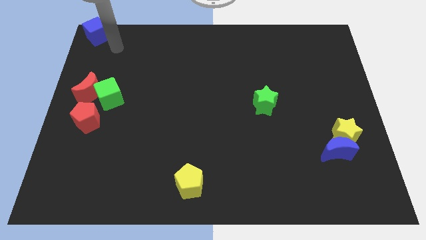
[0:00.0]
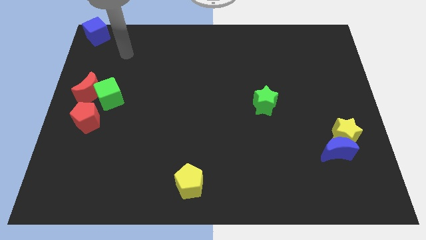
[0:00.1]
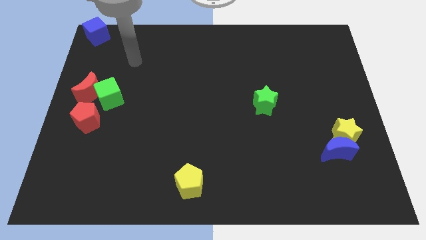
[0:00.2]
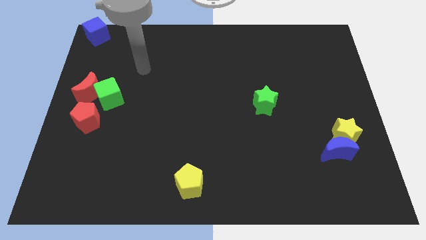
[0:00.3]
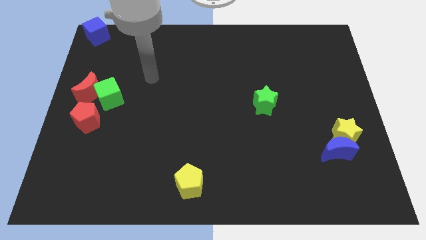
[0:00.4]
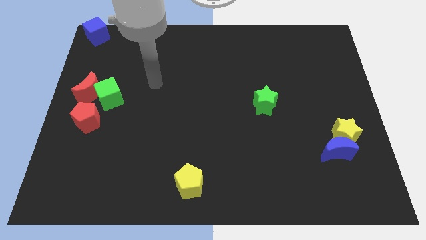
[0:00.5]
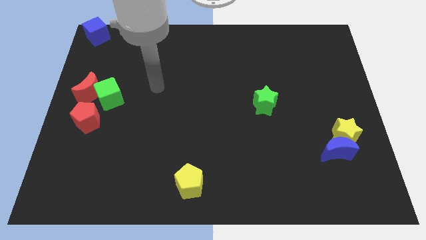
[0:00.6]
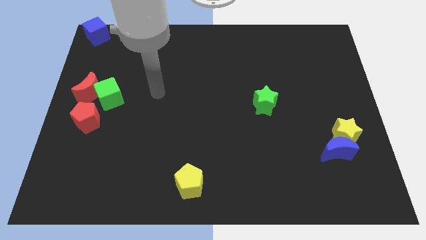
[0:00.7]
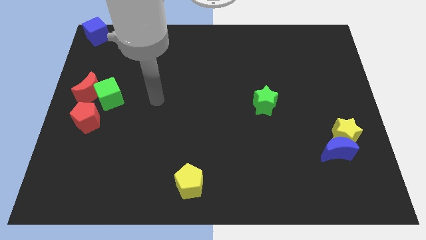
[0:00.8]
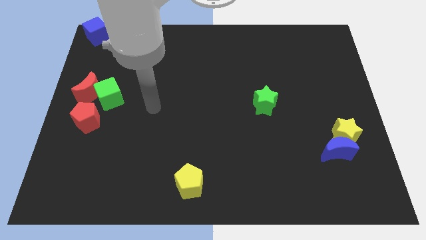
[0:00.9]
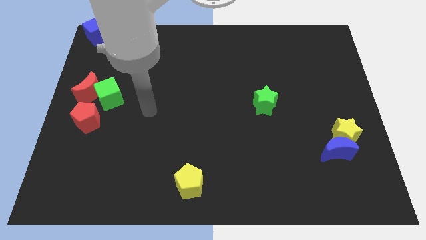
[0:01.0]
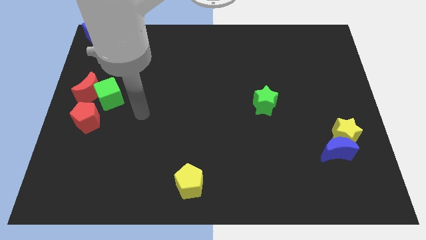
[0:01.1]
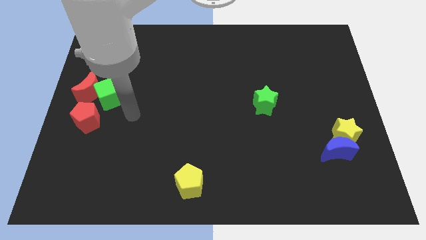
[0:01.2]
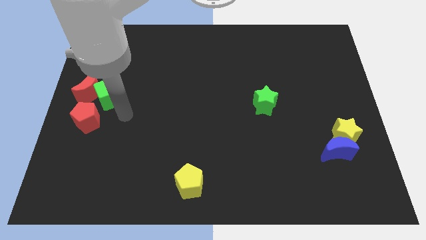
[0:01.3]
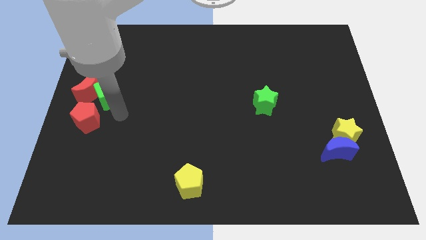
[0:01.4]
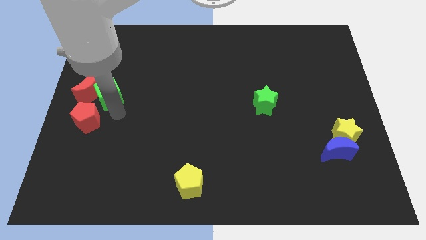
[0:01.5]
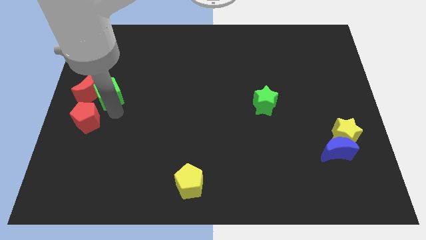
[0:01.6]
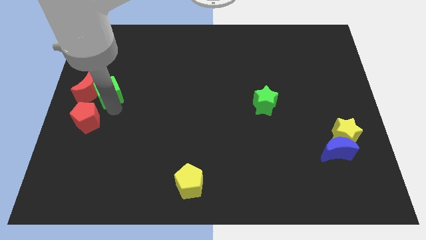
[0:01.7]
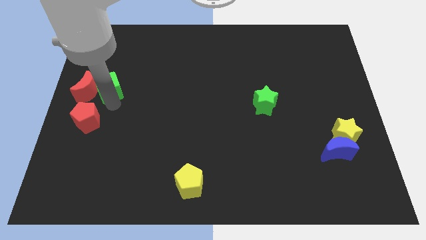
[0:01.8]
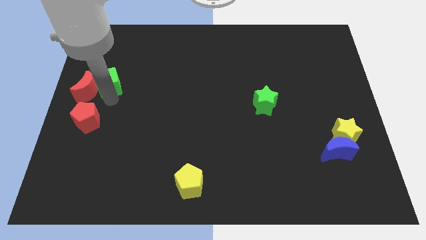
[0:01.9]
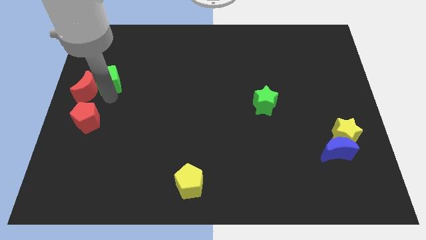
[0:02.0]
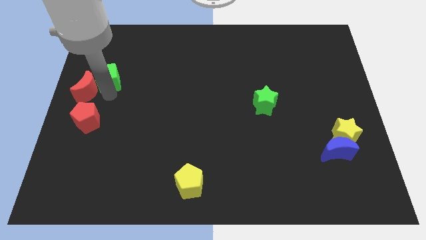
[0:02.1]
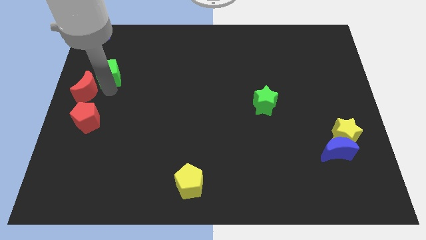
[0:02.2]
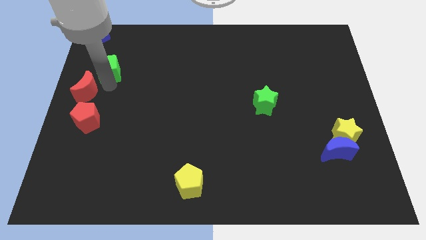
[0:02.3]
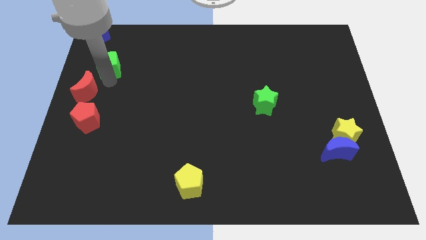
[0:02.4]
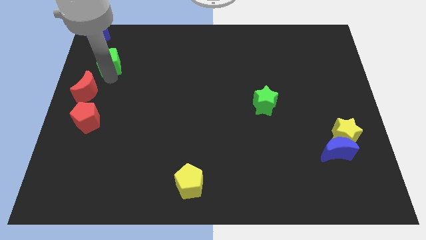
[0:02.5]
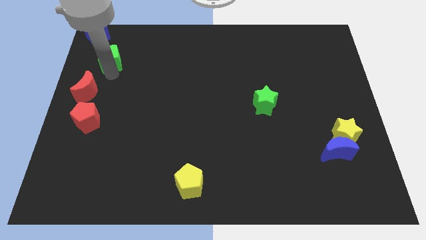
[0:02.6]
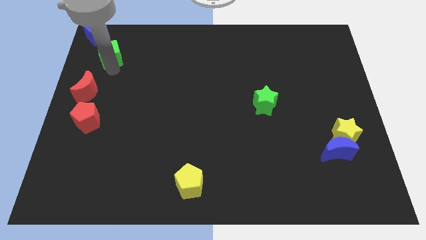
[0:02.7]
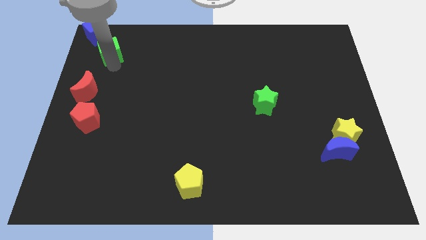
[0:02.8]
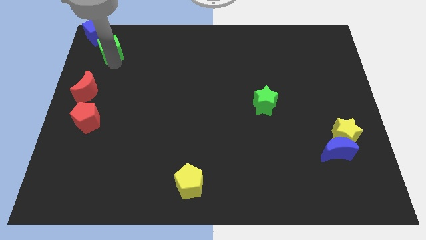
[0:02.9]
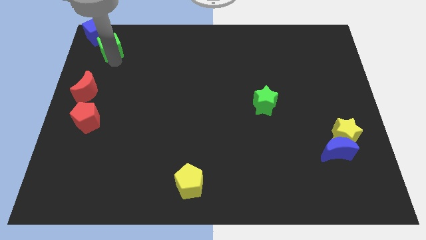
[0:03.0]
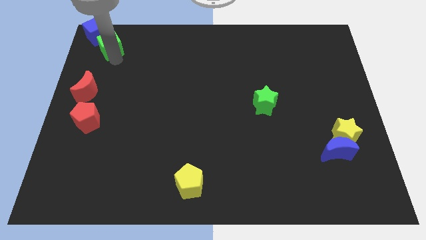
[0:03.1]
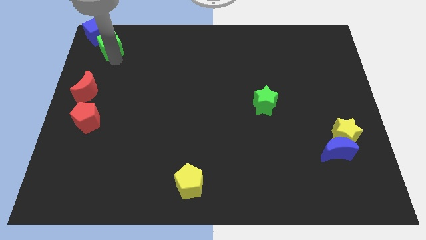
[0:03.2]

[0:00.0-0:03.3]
place the green cube diagonally below the bottom right side of the blue cube

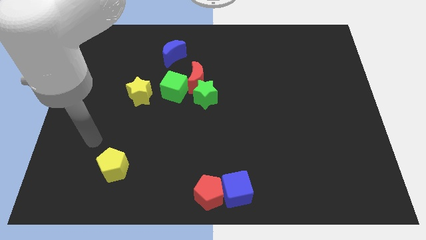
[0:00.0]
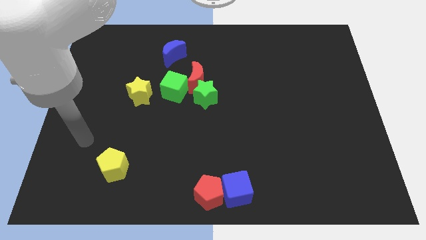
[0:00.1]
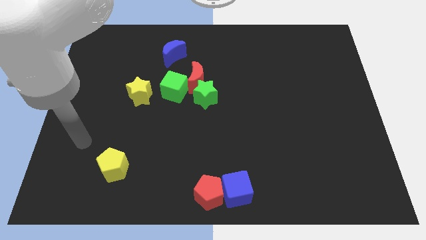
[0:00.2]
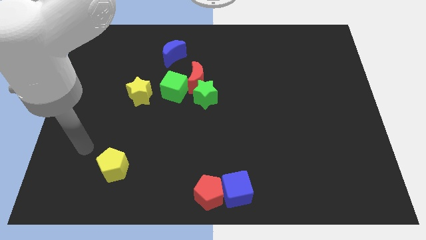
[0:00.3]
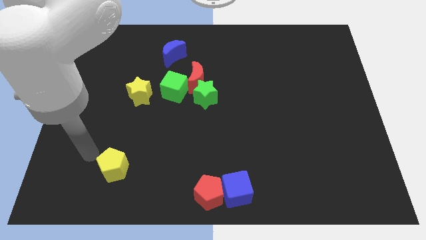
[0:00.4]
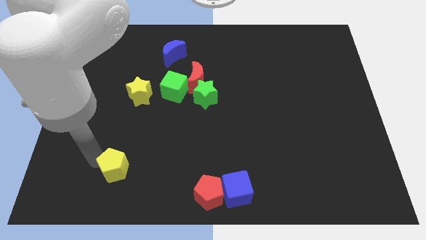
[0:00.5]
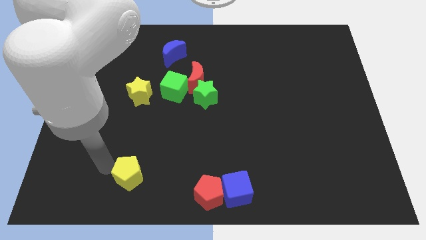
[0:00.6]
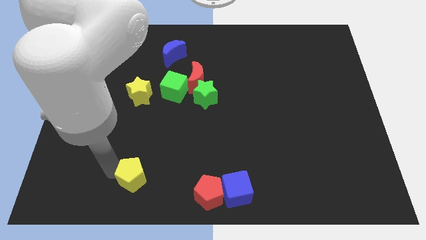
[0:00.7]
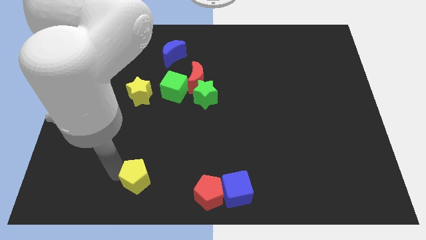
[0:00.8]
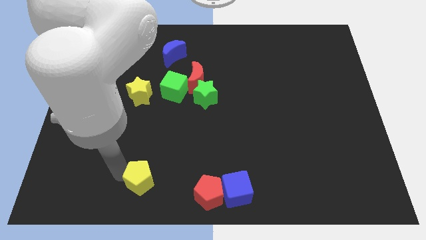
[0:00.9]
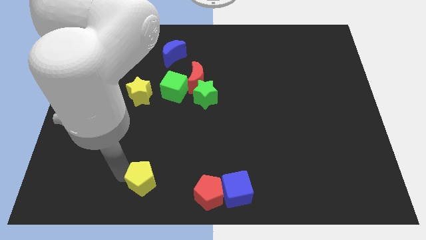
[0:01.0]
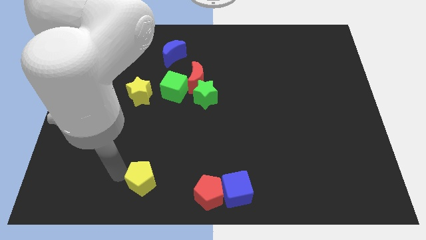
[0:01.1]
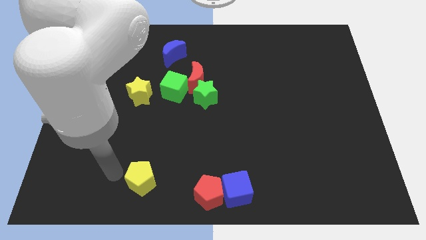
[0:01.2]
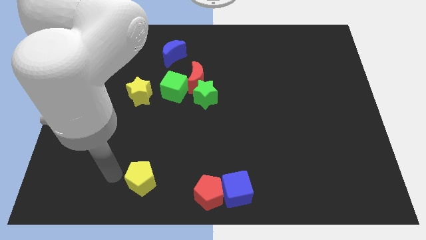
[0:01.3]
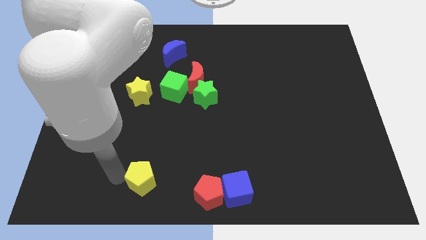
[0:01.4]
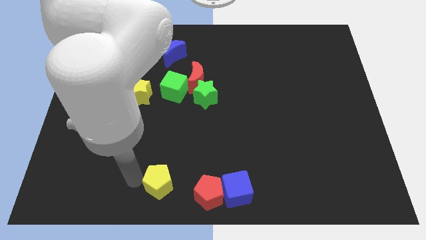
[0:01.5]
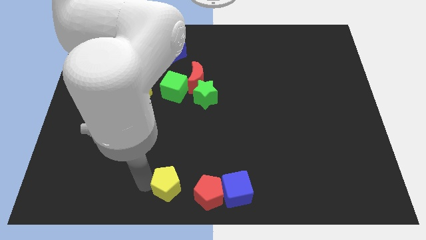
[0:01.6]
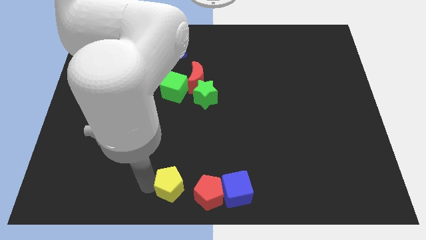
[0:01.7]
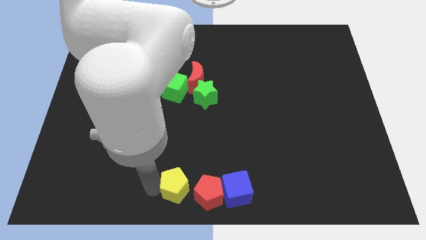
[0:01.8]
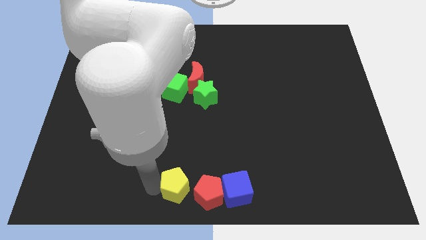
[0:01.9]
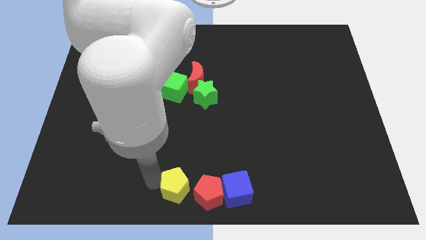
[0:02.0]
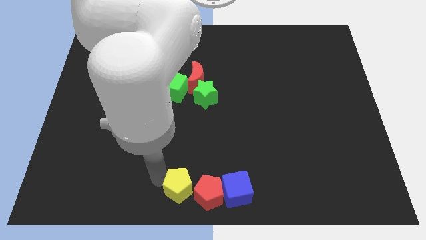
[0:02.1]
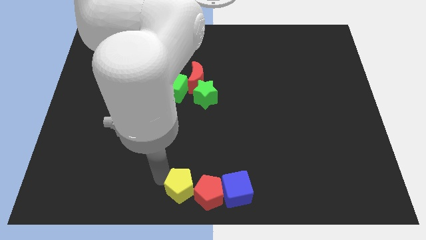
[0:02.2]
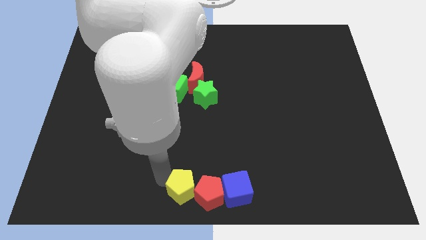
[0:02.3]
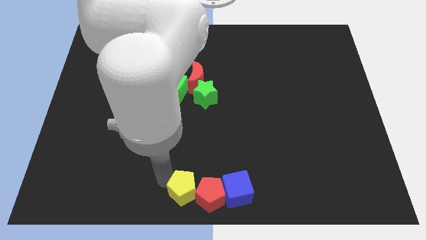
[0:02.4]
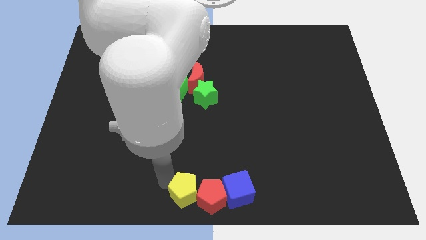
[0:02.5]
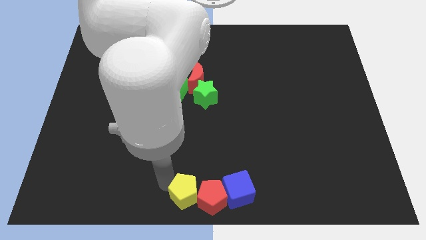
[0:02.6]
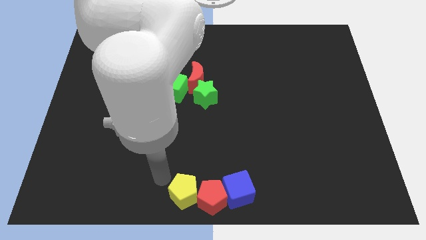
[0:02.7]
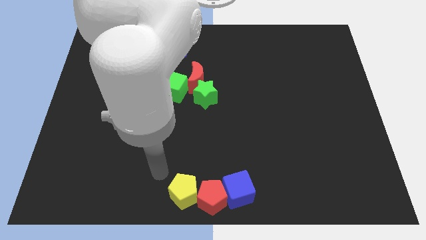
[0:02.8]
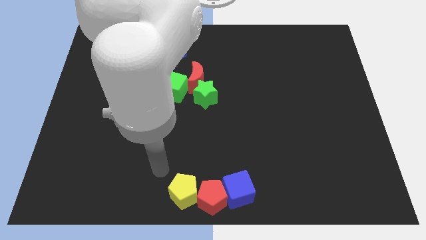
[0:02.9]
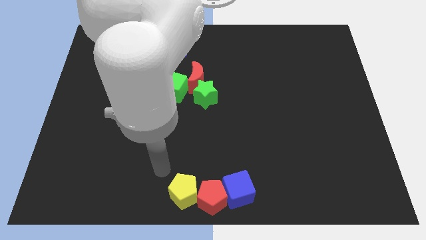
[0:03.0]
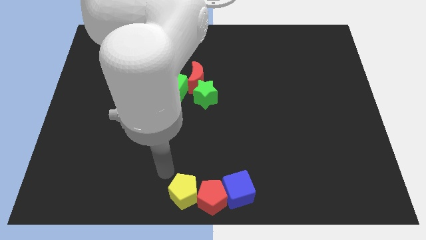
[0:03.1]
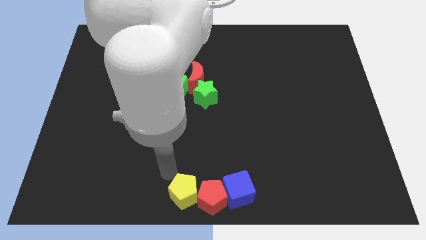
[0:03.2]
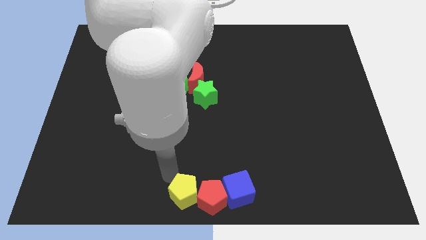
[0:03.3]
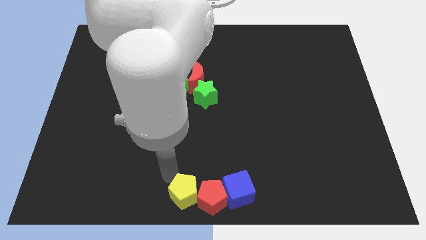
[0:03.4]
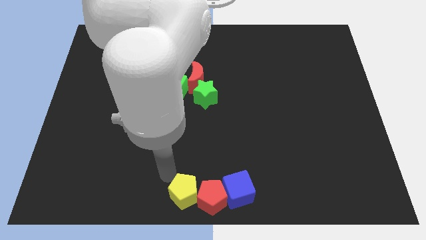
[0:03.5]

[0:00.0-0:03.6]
push the yellow pentagon left to the red pentagon

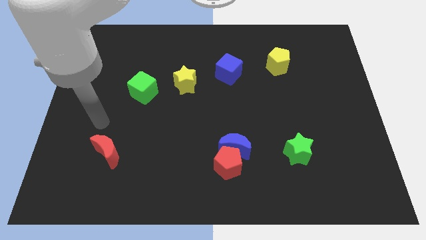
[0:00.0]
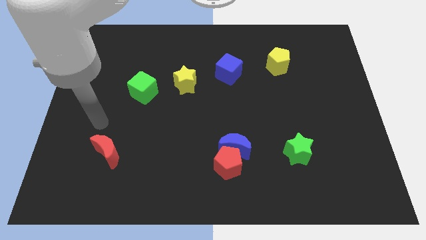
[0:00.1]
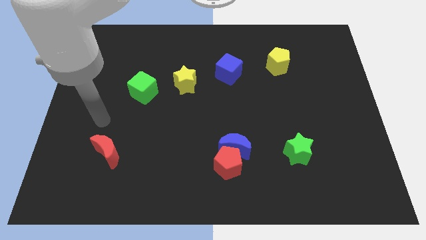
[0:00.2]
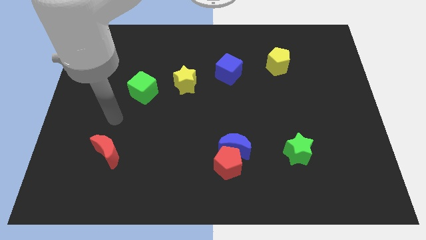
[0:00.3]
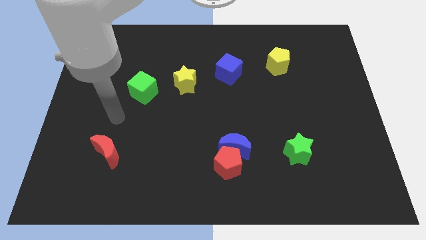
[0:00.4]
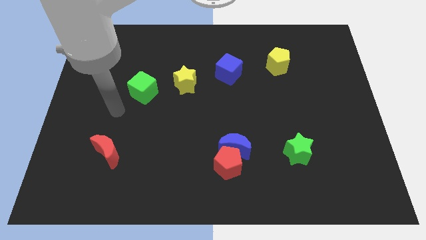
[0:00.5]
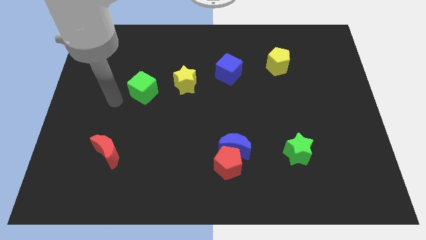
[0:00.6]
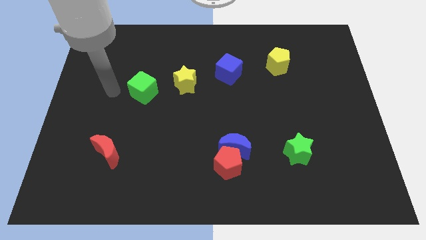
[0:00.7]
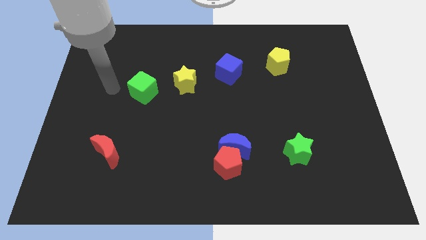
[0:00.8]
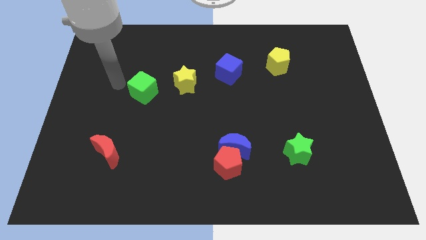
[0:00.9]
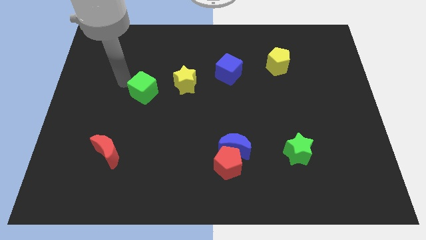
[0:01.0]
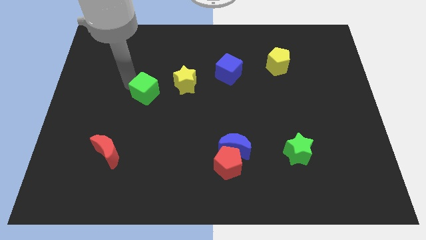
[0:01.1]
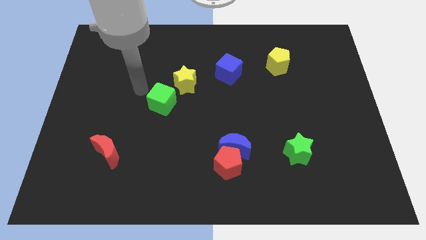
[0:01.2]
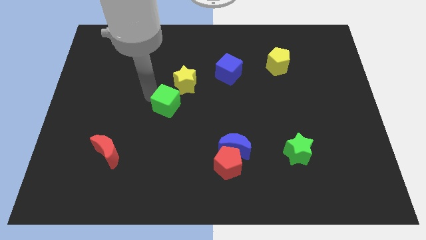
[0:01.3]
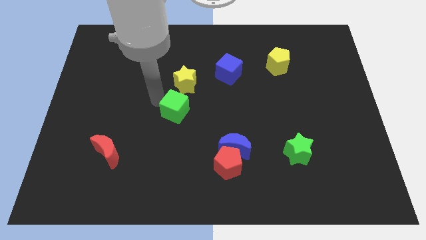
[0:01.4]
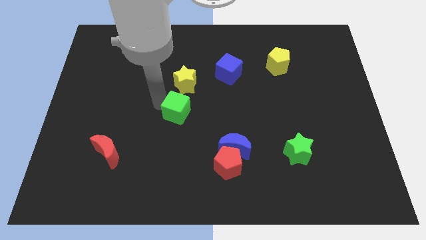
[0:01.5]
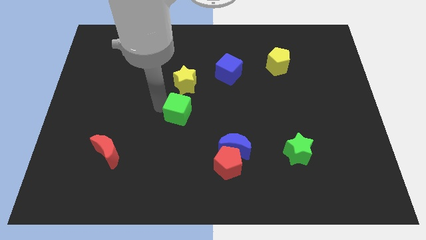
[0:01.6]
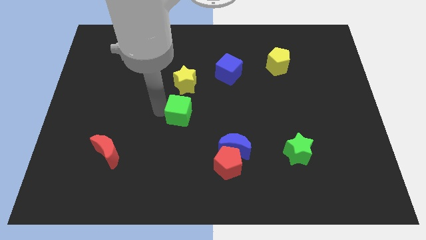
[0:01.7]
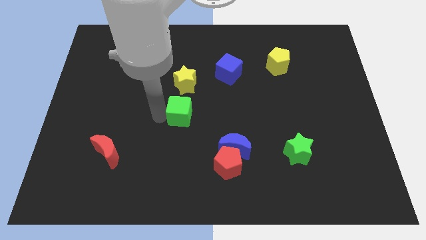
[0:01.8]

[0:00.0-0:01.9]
place the green cube below the yellow star
